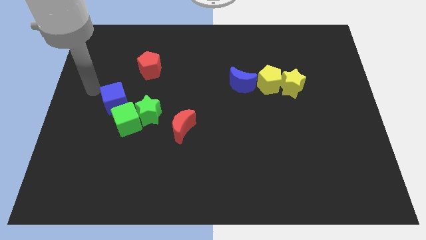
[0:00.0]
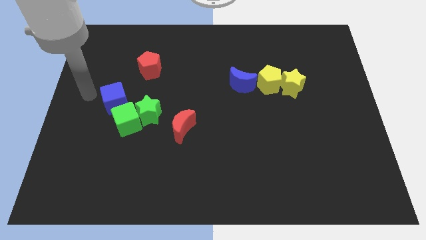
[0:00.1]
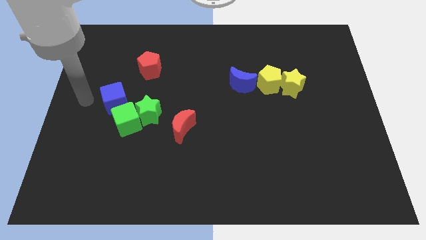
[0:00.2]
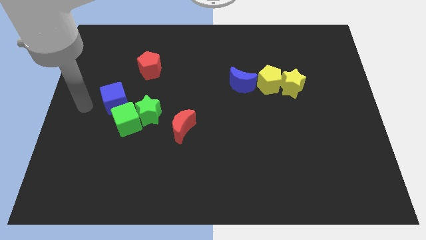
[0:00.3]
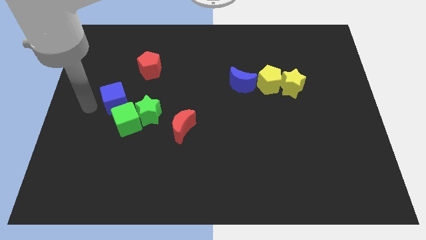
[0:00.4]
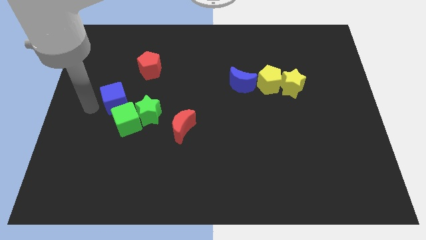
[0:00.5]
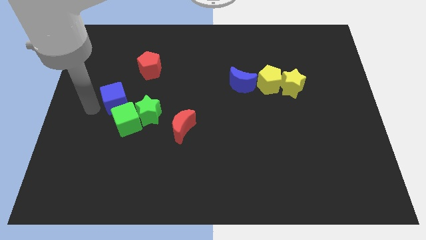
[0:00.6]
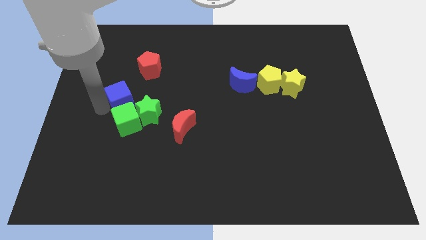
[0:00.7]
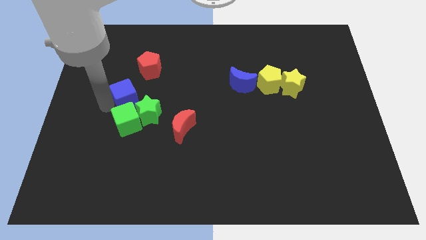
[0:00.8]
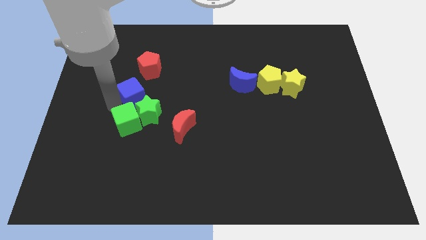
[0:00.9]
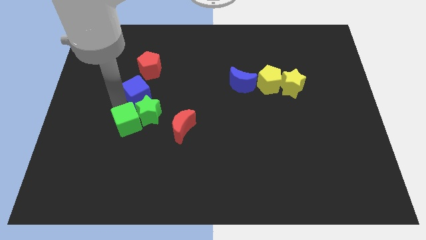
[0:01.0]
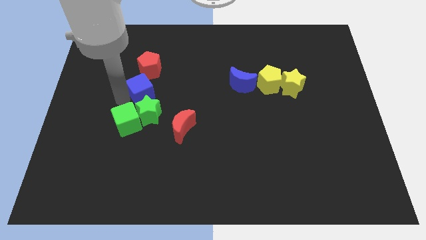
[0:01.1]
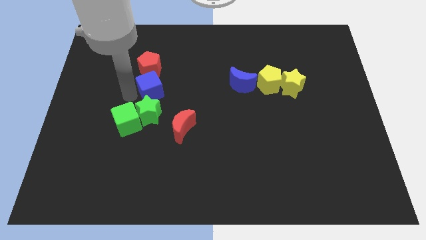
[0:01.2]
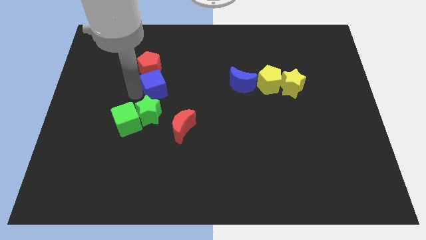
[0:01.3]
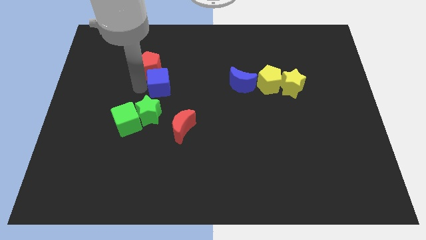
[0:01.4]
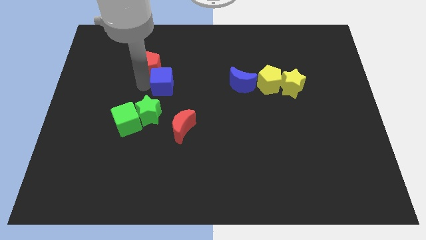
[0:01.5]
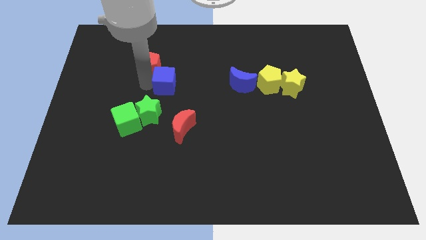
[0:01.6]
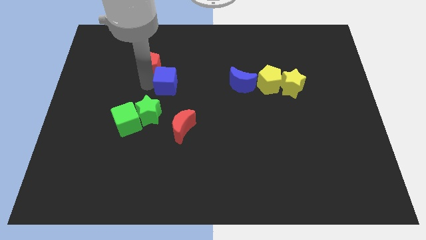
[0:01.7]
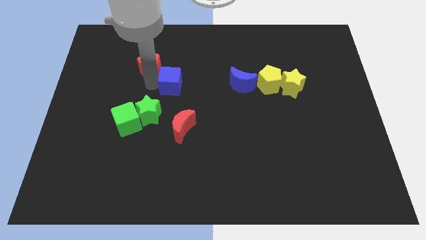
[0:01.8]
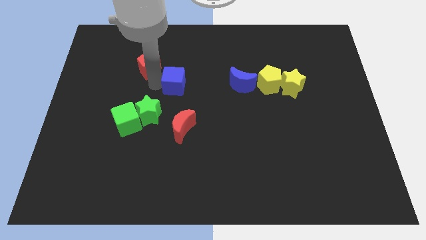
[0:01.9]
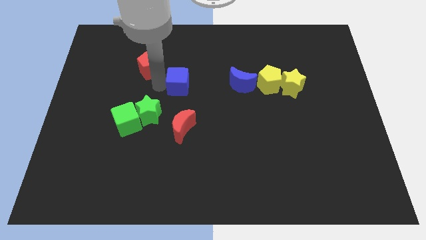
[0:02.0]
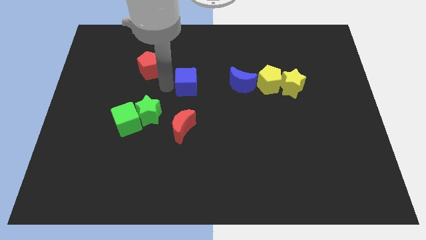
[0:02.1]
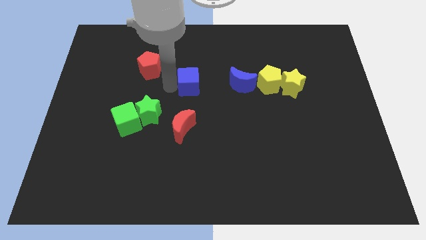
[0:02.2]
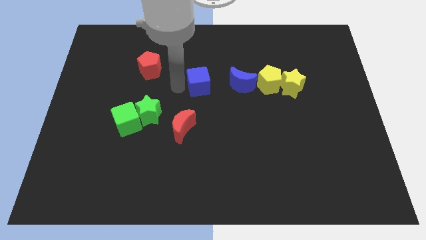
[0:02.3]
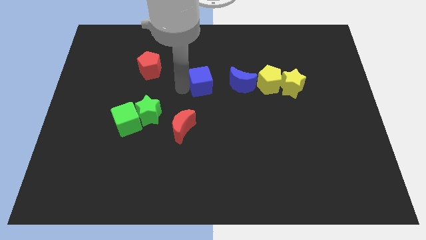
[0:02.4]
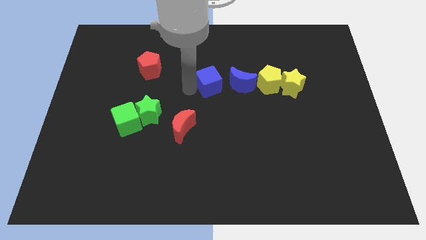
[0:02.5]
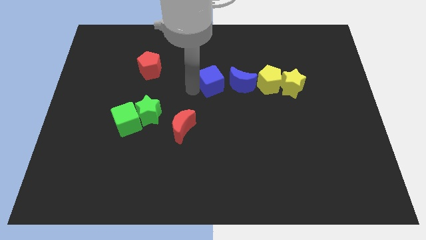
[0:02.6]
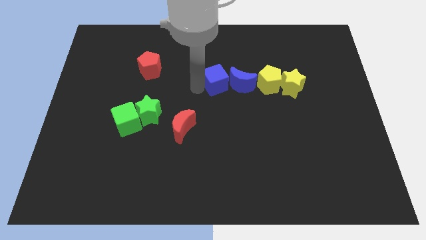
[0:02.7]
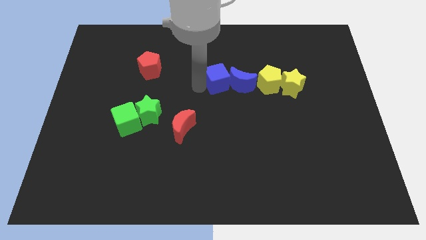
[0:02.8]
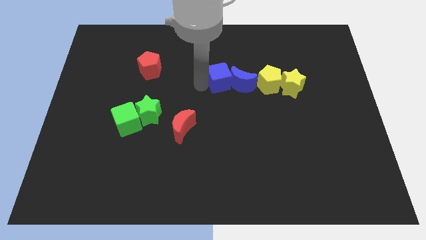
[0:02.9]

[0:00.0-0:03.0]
move blue cube into the blue moon

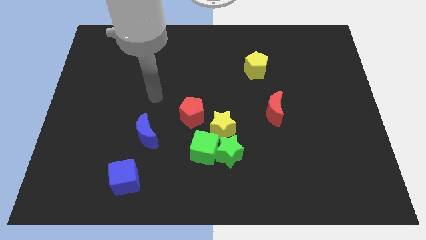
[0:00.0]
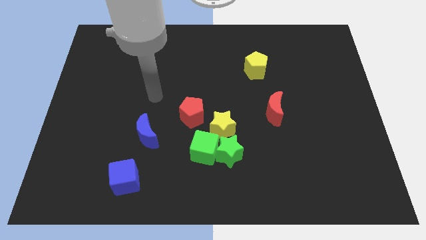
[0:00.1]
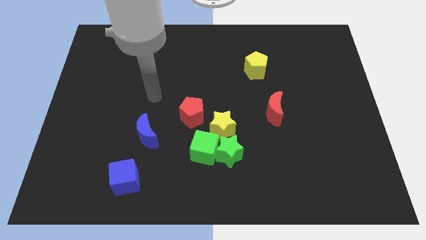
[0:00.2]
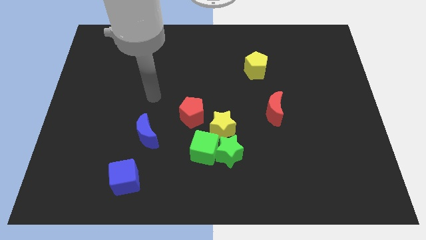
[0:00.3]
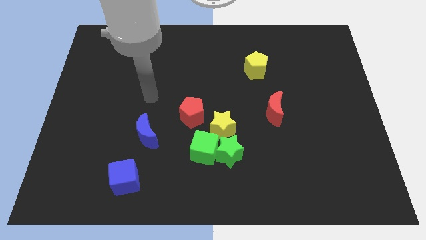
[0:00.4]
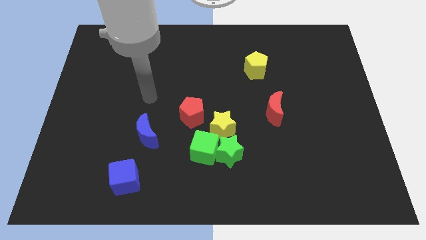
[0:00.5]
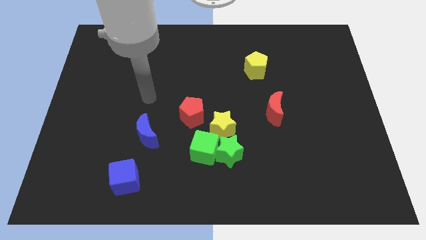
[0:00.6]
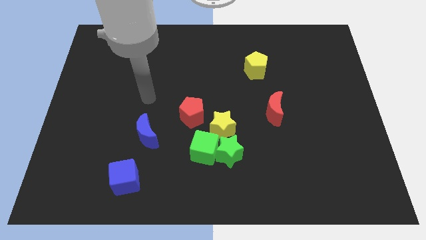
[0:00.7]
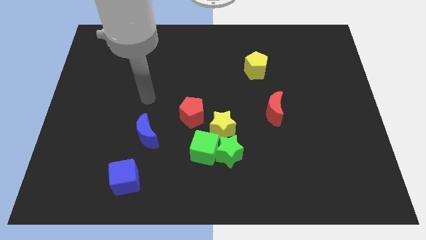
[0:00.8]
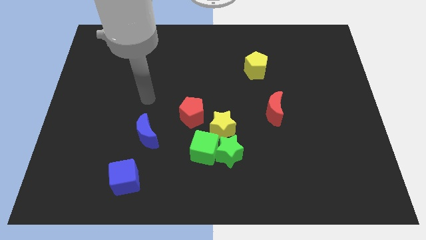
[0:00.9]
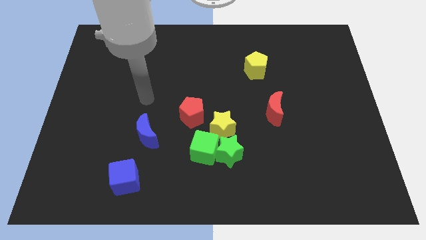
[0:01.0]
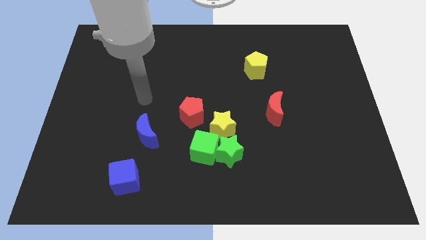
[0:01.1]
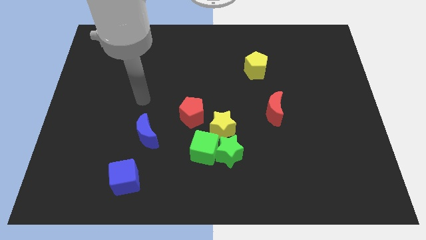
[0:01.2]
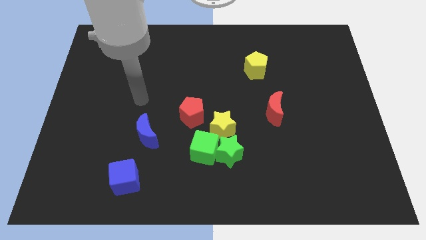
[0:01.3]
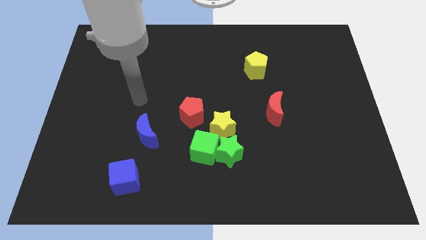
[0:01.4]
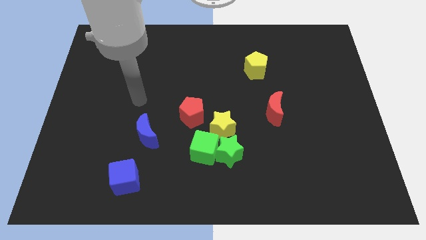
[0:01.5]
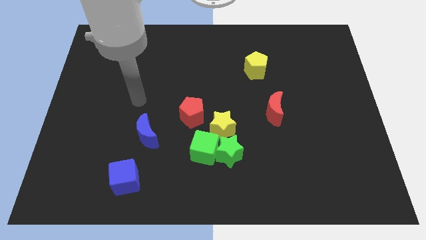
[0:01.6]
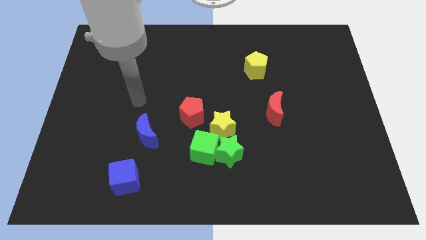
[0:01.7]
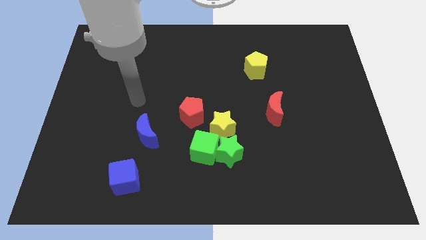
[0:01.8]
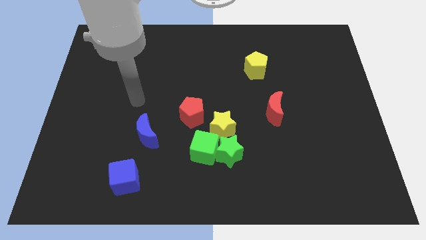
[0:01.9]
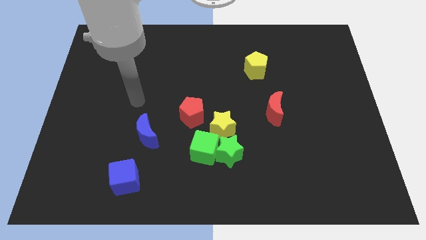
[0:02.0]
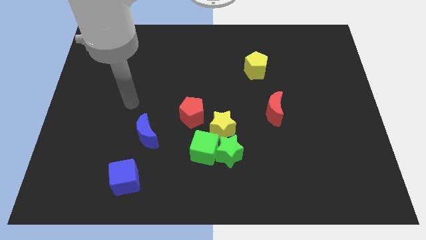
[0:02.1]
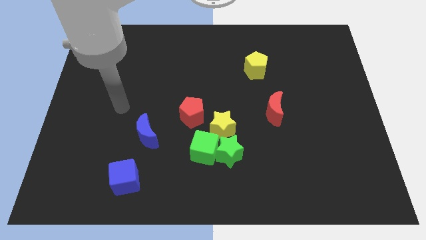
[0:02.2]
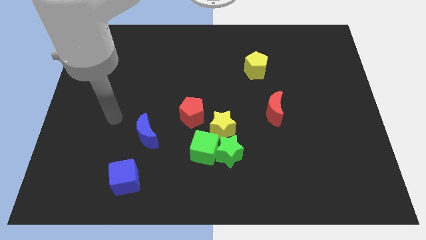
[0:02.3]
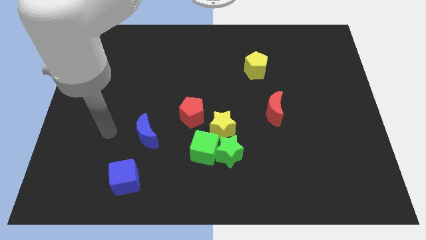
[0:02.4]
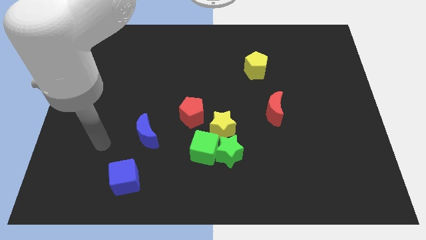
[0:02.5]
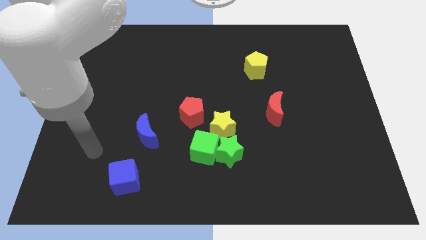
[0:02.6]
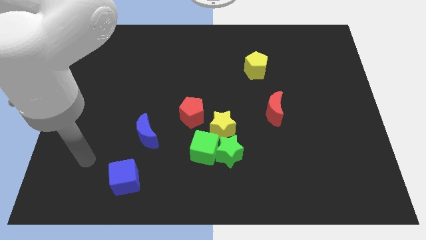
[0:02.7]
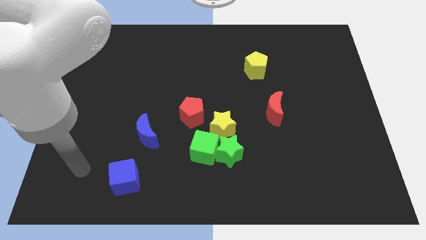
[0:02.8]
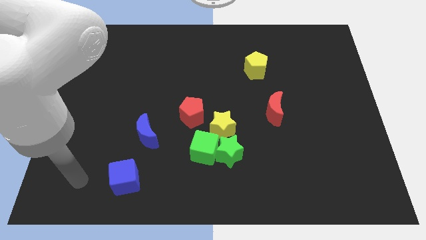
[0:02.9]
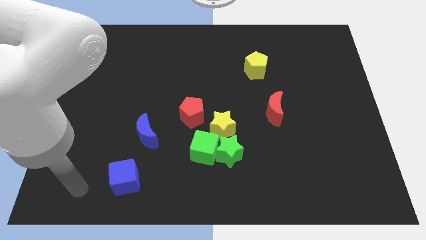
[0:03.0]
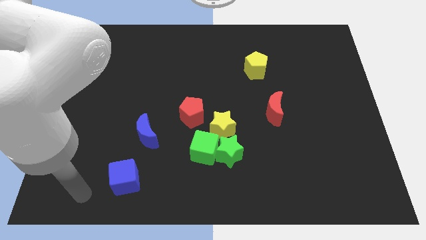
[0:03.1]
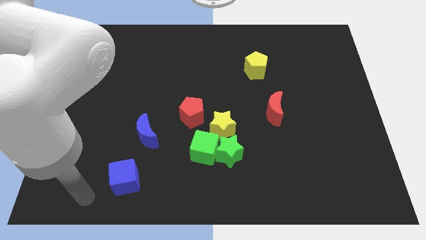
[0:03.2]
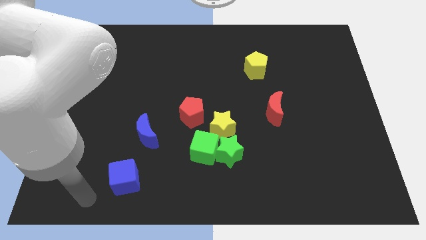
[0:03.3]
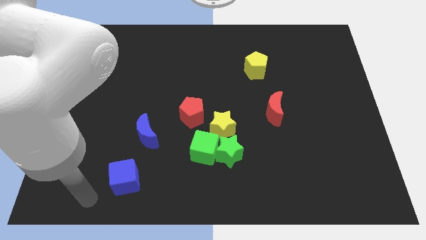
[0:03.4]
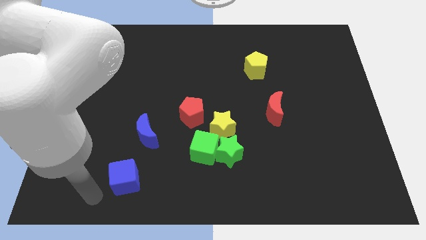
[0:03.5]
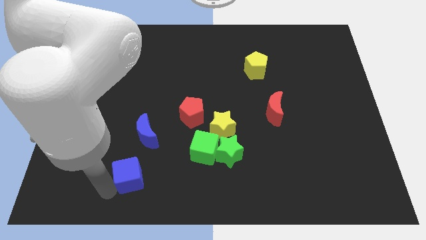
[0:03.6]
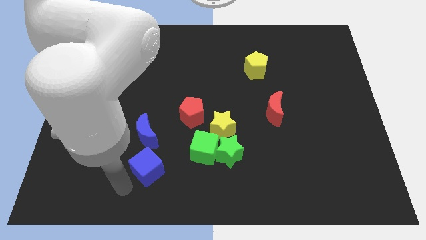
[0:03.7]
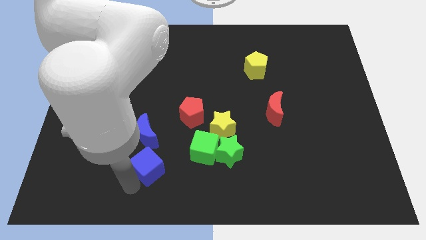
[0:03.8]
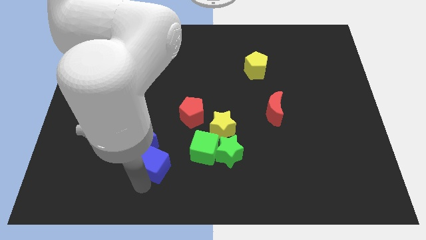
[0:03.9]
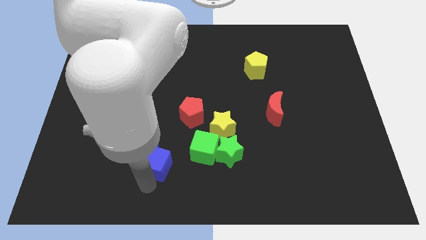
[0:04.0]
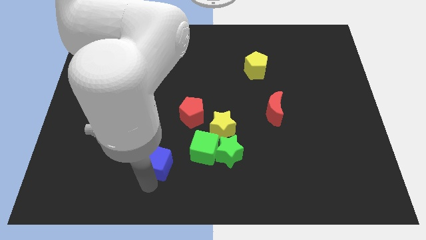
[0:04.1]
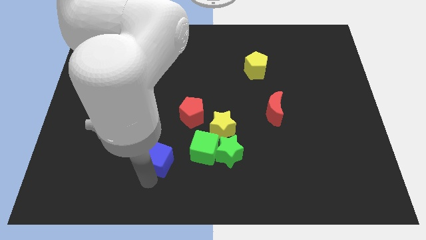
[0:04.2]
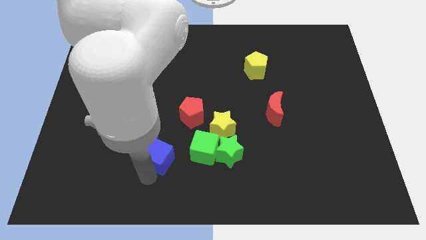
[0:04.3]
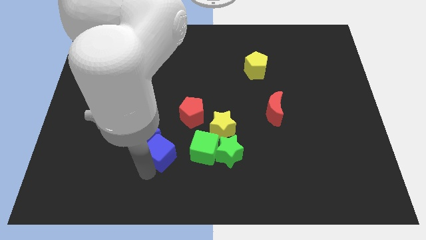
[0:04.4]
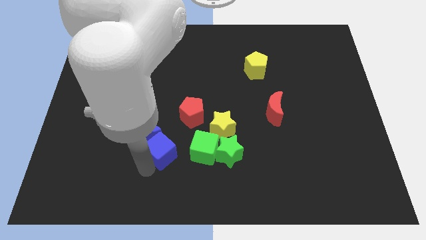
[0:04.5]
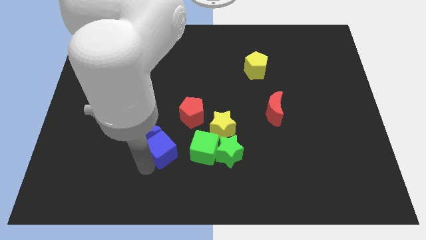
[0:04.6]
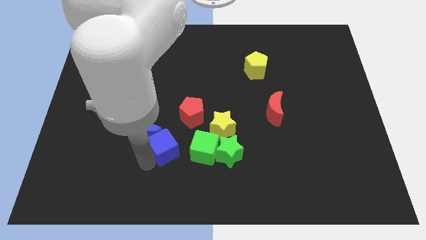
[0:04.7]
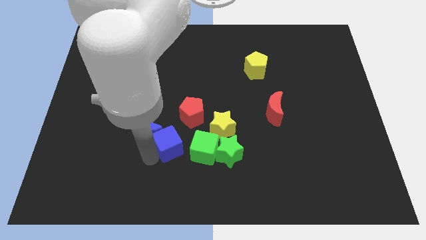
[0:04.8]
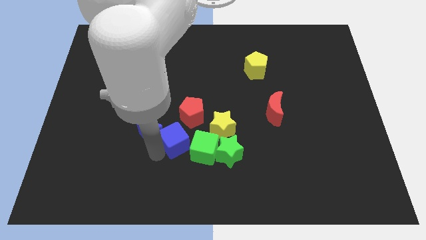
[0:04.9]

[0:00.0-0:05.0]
push the blue cube in between blue crescent and green cube

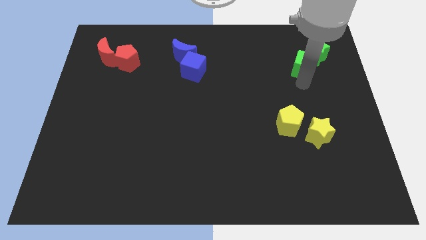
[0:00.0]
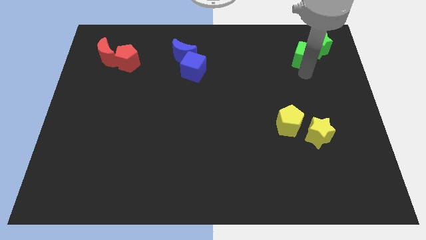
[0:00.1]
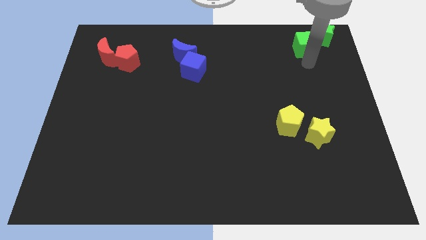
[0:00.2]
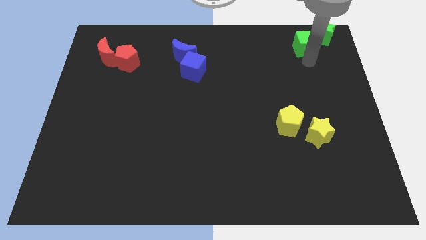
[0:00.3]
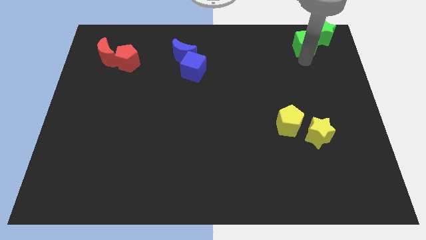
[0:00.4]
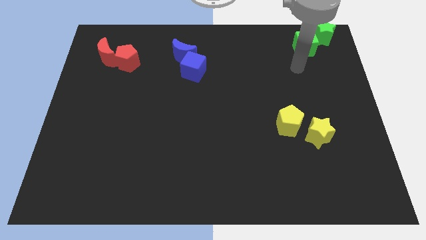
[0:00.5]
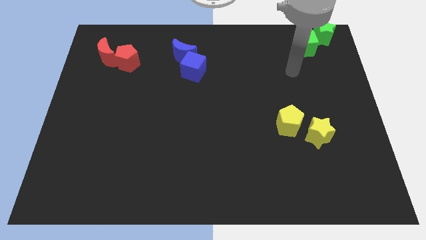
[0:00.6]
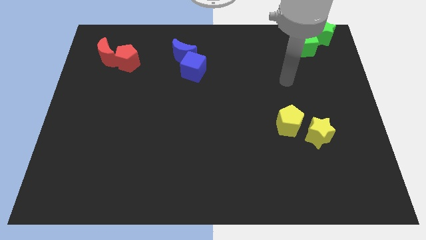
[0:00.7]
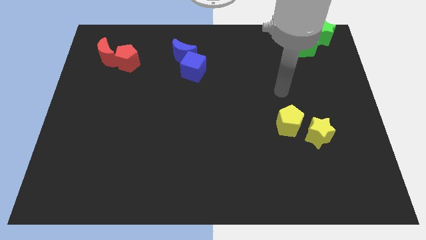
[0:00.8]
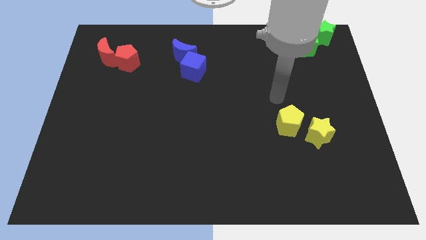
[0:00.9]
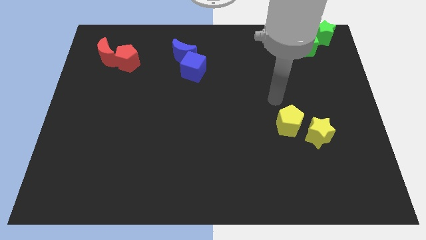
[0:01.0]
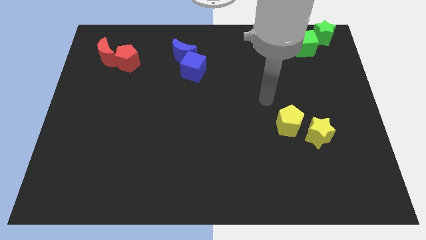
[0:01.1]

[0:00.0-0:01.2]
push the green cube along with the green star to the right corner of the board
